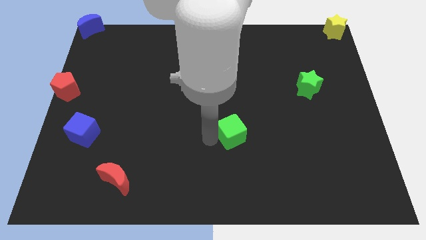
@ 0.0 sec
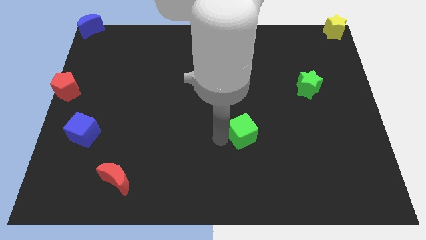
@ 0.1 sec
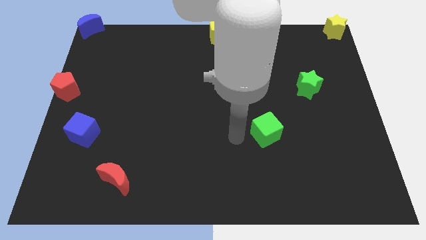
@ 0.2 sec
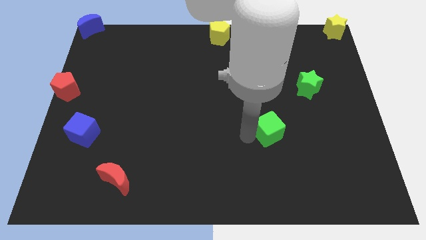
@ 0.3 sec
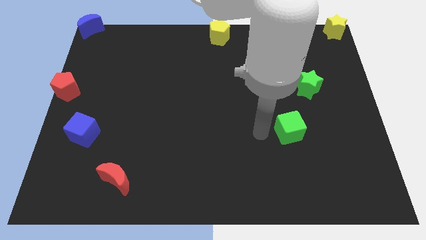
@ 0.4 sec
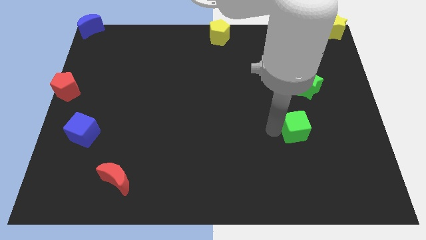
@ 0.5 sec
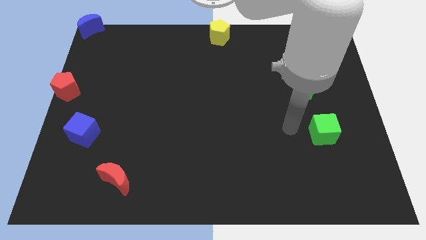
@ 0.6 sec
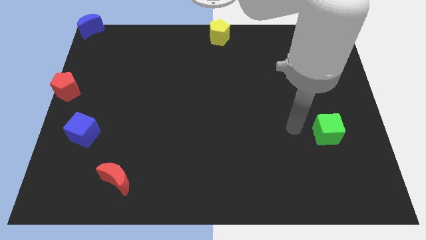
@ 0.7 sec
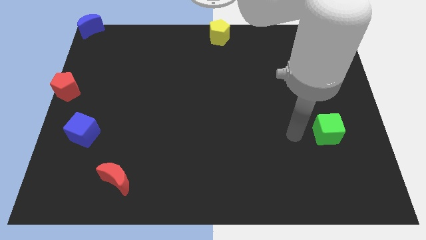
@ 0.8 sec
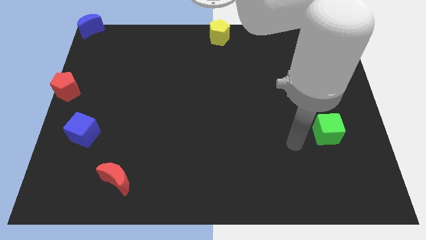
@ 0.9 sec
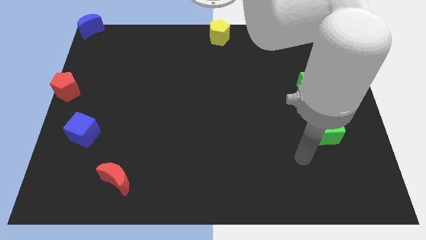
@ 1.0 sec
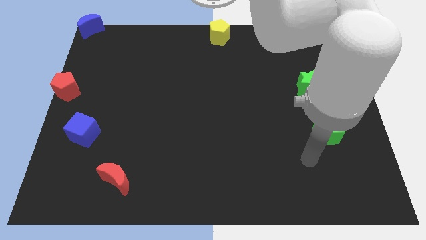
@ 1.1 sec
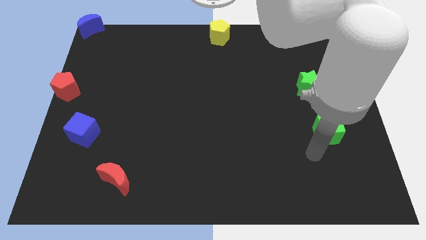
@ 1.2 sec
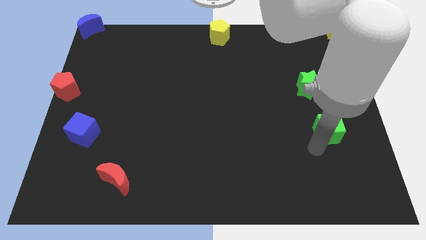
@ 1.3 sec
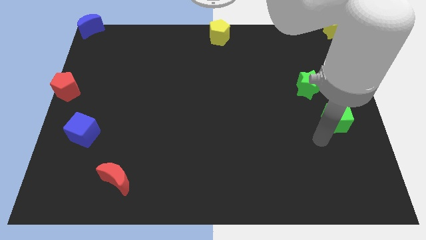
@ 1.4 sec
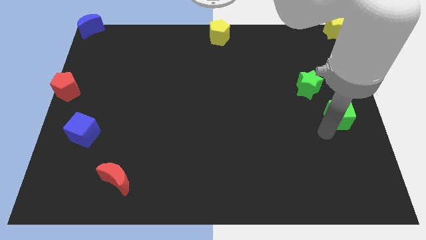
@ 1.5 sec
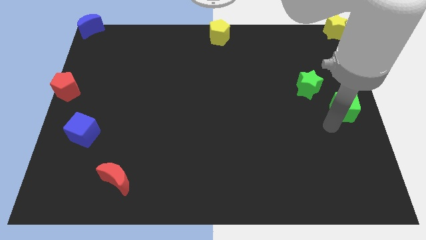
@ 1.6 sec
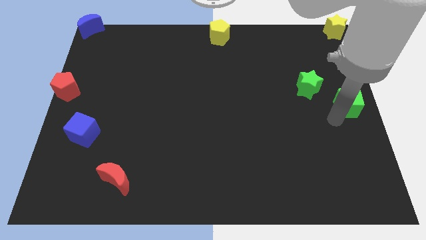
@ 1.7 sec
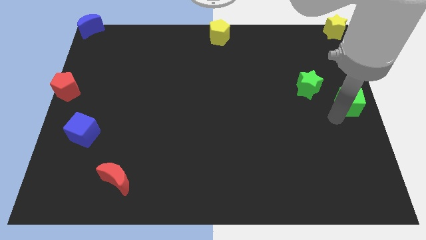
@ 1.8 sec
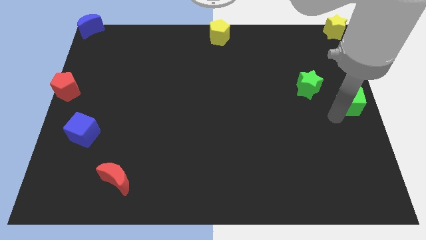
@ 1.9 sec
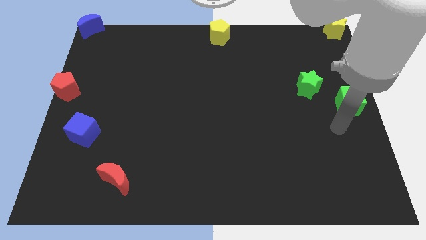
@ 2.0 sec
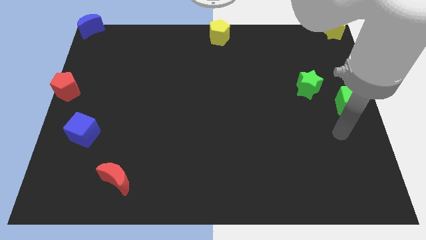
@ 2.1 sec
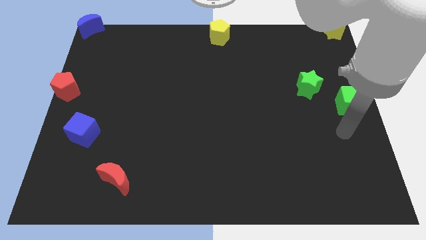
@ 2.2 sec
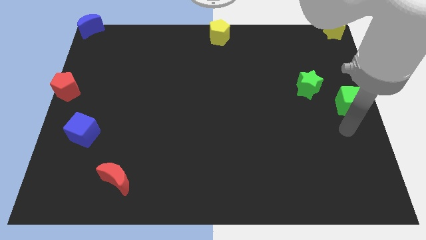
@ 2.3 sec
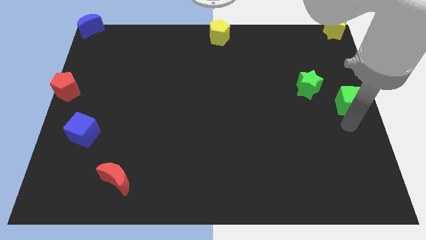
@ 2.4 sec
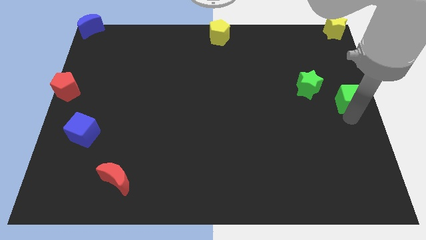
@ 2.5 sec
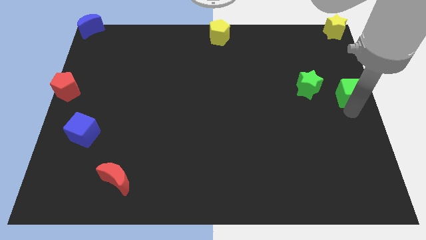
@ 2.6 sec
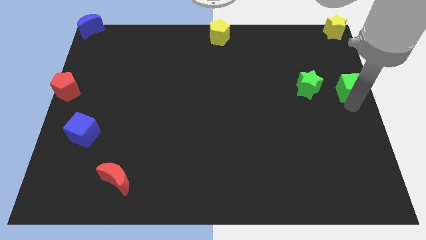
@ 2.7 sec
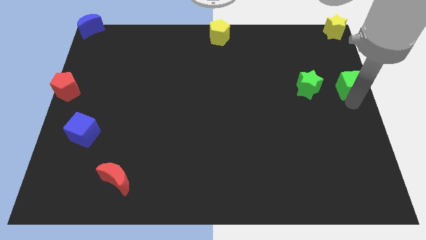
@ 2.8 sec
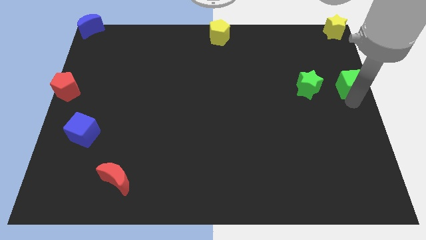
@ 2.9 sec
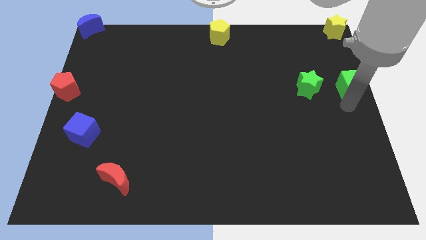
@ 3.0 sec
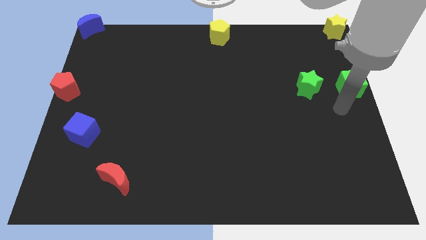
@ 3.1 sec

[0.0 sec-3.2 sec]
push green cube below yellow star

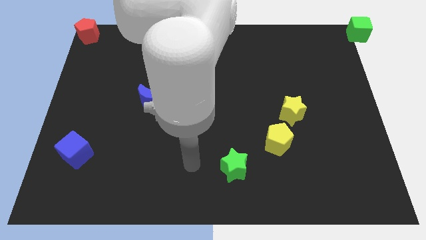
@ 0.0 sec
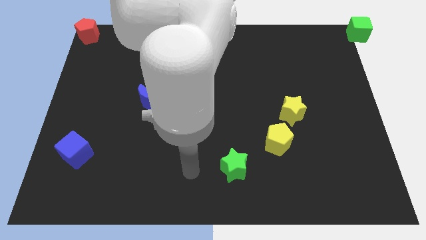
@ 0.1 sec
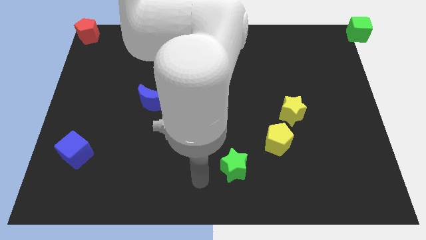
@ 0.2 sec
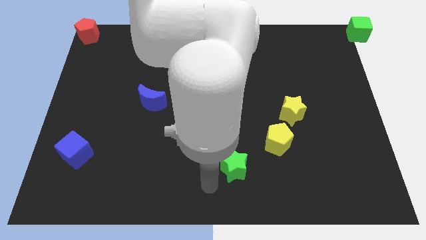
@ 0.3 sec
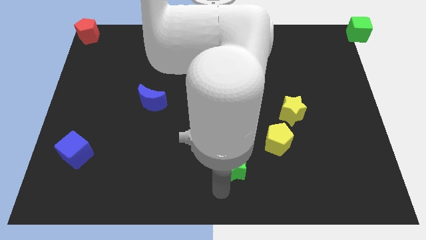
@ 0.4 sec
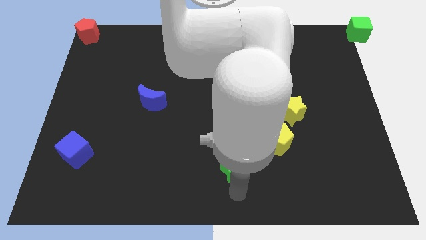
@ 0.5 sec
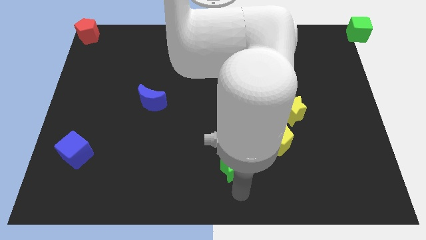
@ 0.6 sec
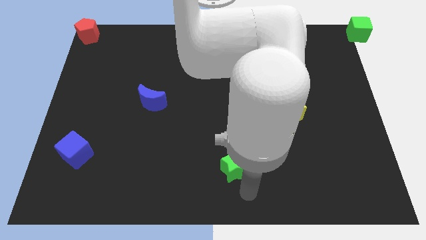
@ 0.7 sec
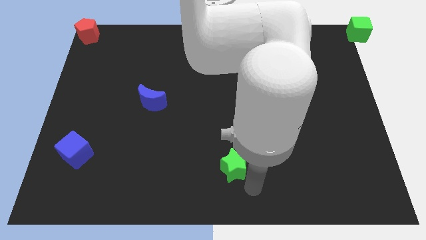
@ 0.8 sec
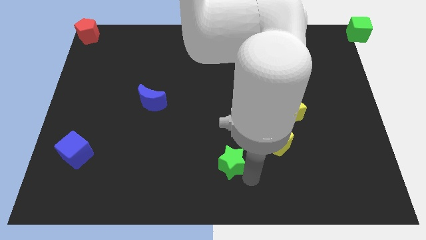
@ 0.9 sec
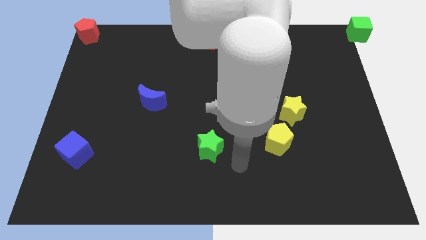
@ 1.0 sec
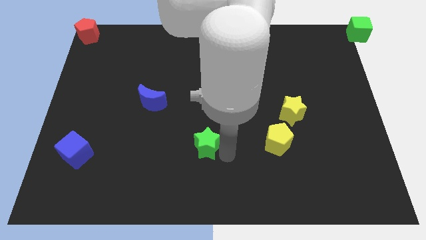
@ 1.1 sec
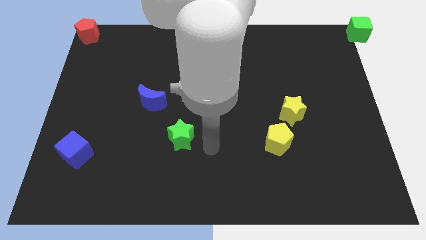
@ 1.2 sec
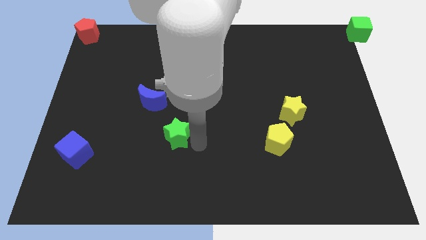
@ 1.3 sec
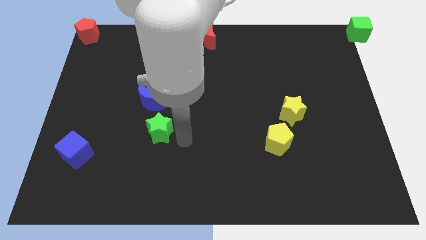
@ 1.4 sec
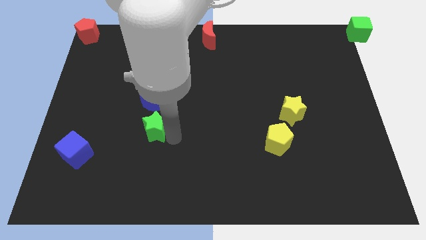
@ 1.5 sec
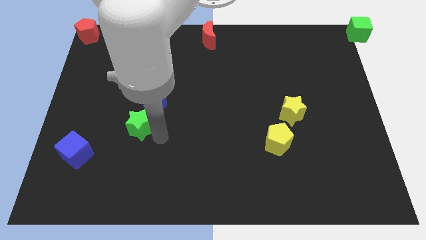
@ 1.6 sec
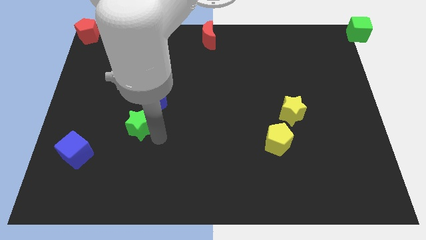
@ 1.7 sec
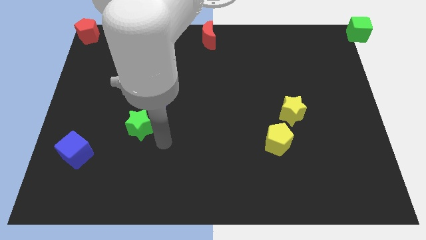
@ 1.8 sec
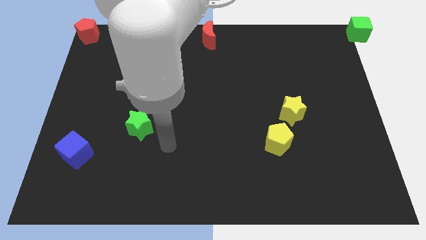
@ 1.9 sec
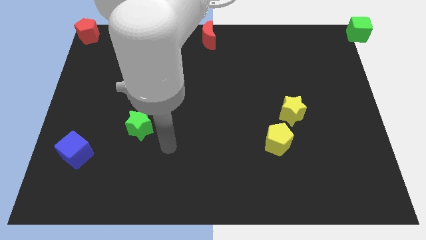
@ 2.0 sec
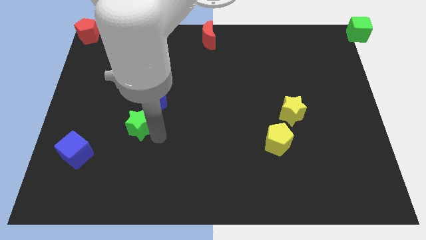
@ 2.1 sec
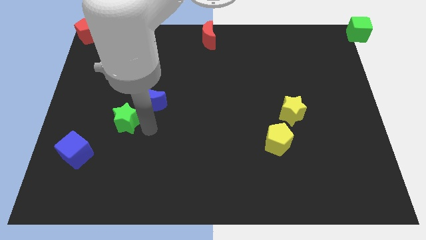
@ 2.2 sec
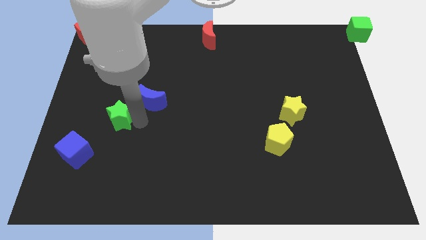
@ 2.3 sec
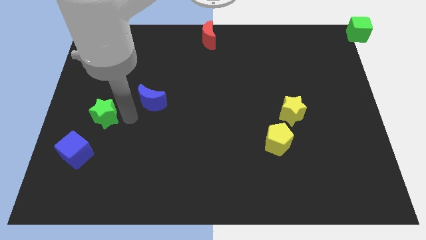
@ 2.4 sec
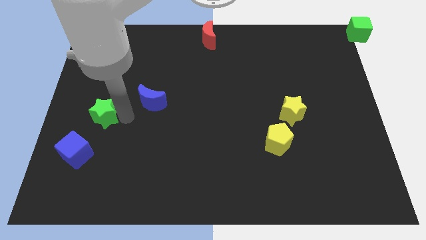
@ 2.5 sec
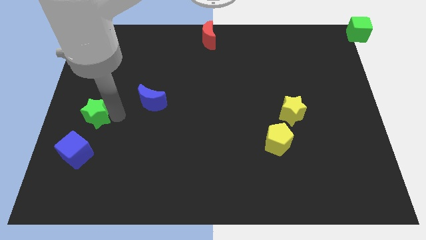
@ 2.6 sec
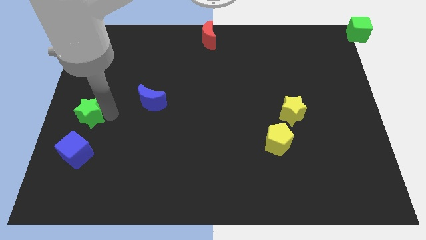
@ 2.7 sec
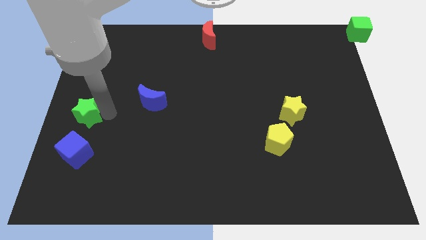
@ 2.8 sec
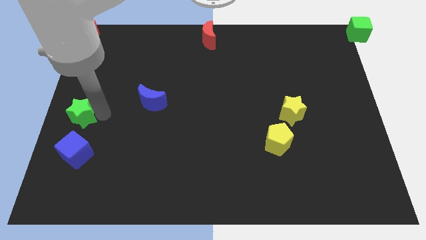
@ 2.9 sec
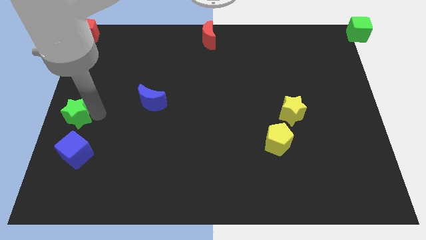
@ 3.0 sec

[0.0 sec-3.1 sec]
place the green star at the top of the blue cube

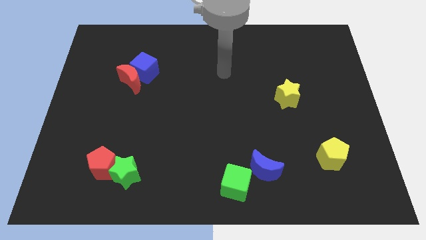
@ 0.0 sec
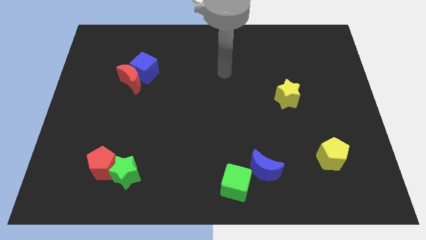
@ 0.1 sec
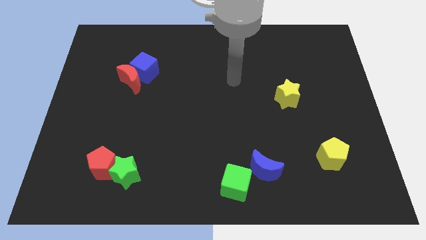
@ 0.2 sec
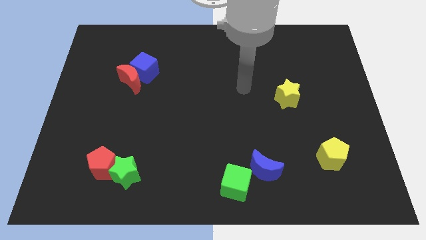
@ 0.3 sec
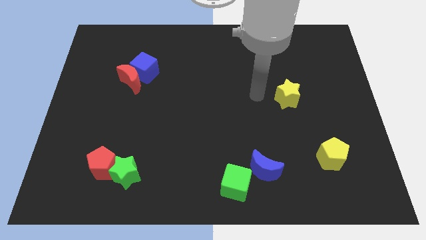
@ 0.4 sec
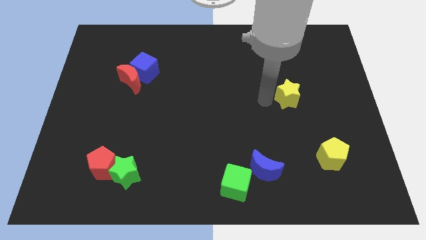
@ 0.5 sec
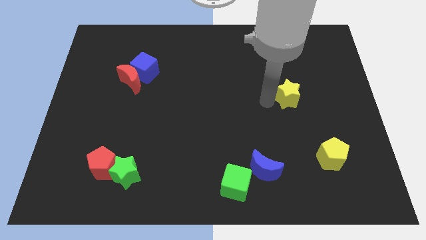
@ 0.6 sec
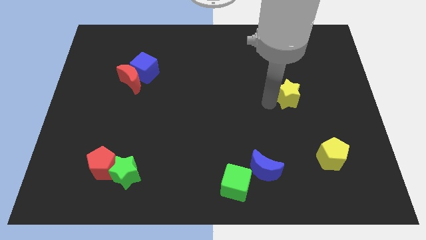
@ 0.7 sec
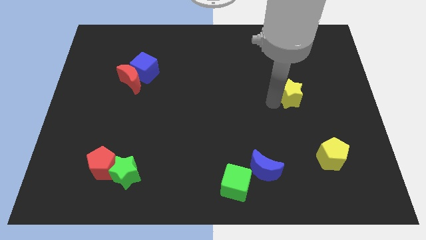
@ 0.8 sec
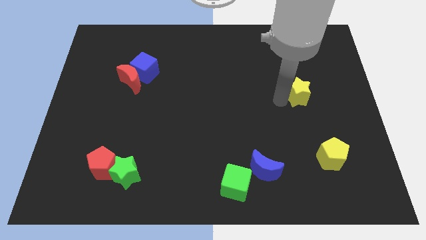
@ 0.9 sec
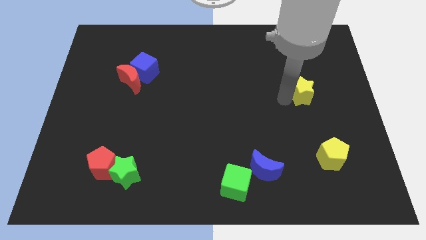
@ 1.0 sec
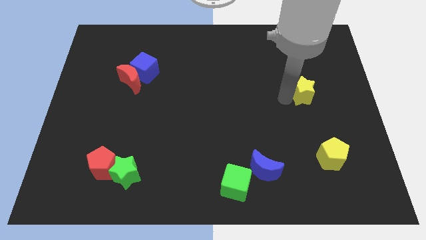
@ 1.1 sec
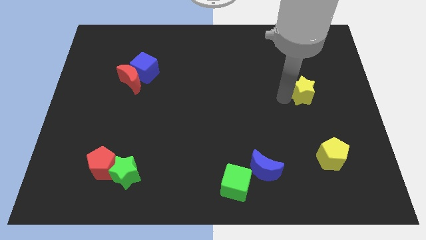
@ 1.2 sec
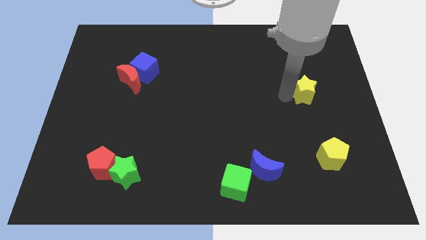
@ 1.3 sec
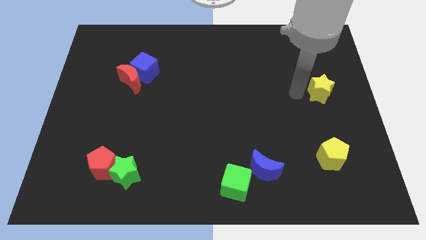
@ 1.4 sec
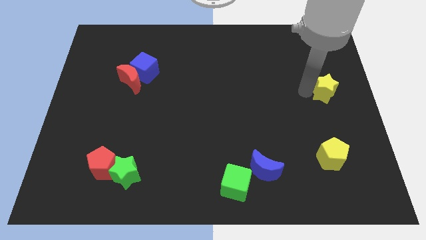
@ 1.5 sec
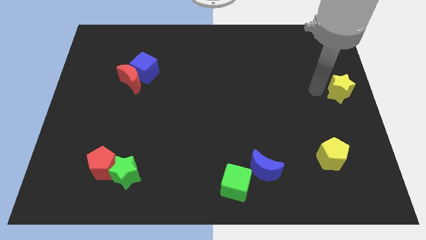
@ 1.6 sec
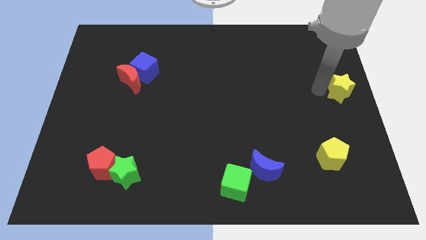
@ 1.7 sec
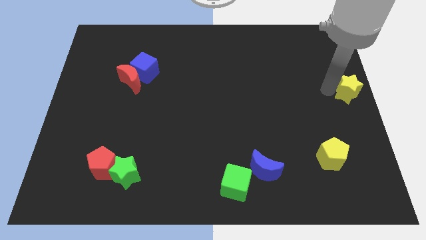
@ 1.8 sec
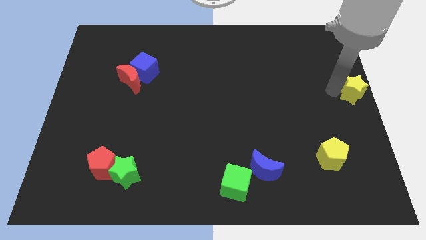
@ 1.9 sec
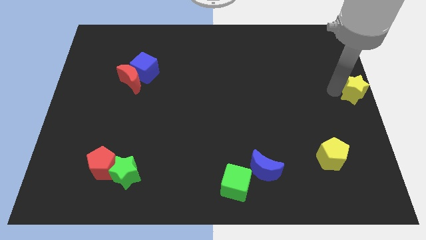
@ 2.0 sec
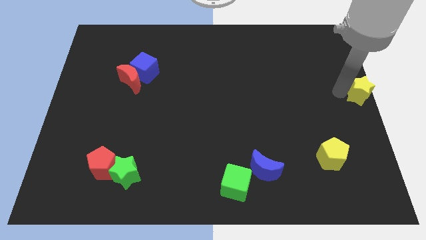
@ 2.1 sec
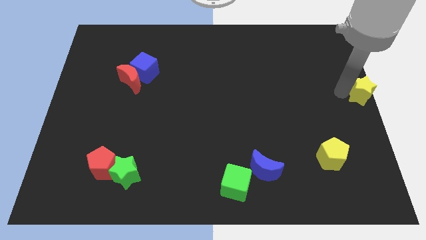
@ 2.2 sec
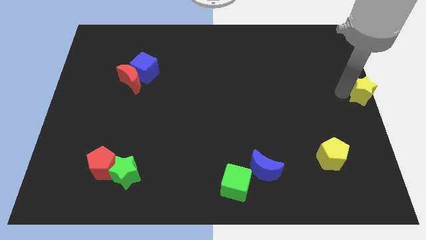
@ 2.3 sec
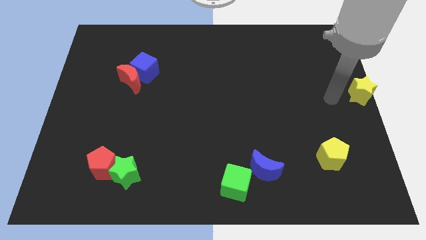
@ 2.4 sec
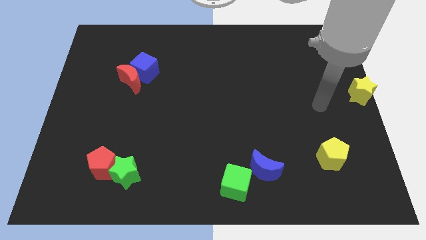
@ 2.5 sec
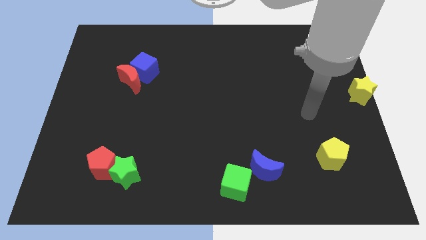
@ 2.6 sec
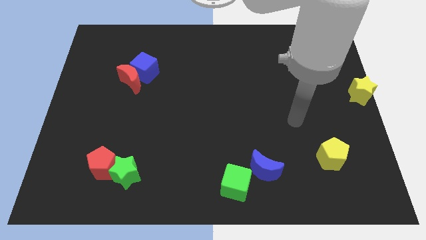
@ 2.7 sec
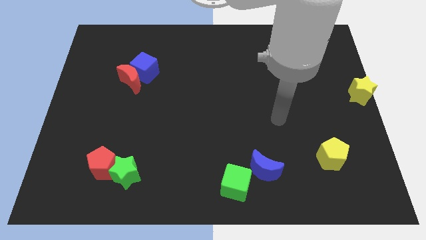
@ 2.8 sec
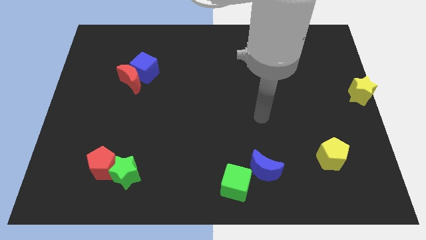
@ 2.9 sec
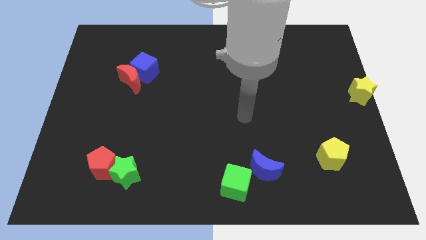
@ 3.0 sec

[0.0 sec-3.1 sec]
place the yellow star at the right center
